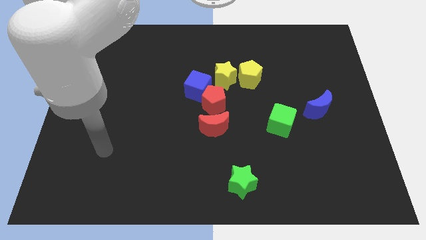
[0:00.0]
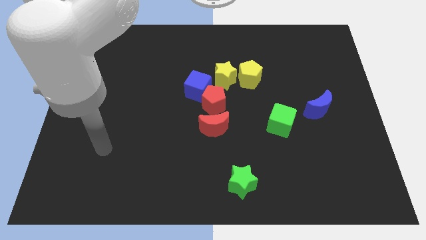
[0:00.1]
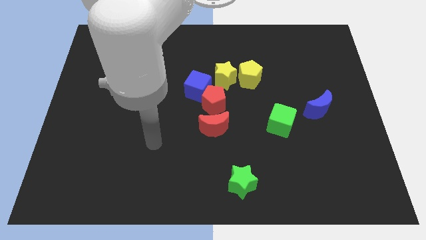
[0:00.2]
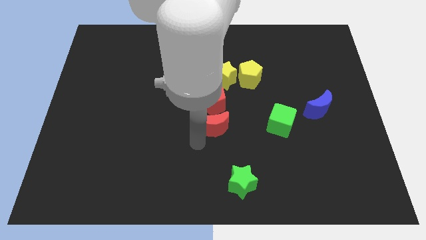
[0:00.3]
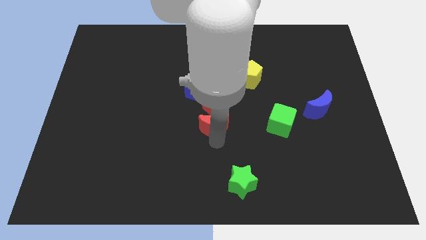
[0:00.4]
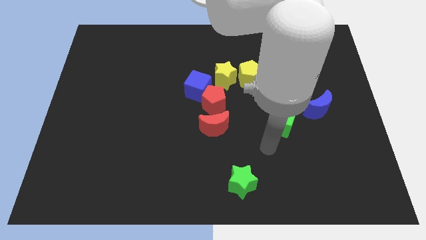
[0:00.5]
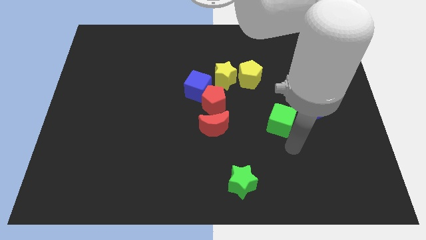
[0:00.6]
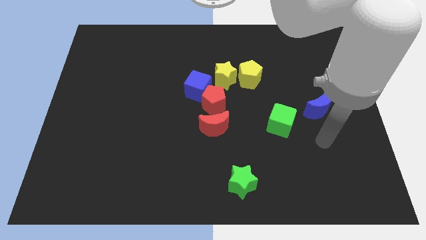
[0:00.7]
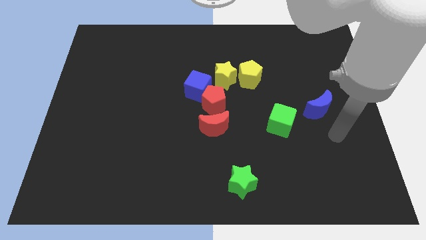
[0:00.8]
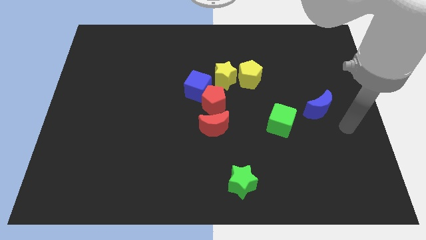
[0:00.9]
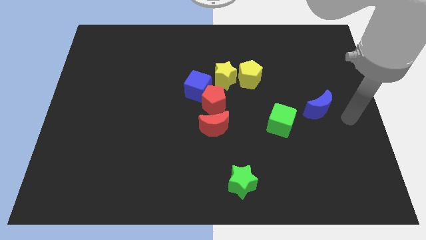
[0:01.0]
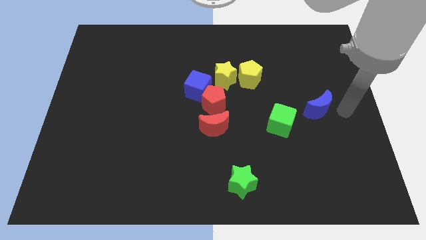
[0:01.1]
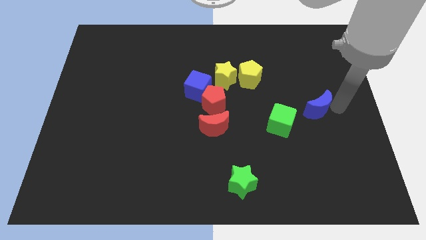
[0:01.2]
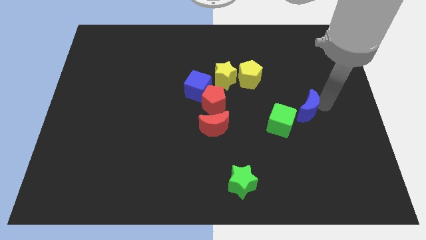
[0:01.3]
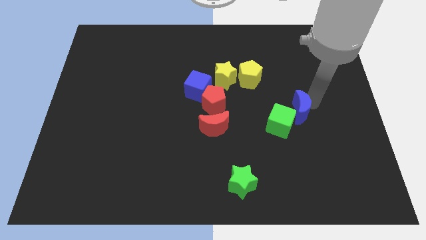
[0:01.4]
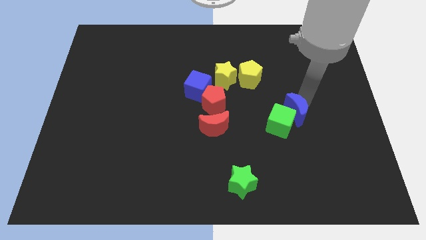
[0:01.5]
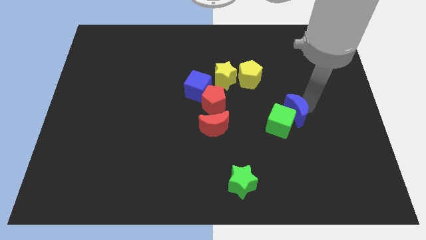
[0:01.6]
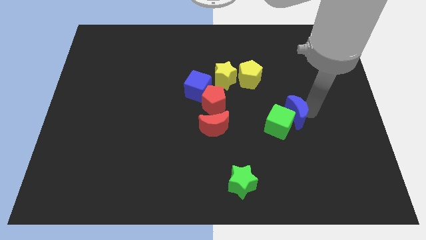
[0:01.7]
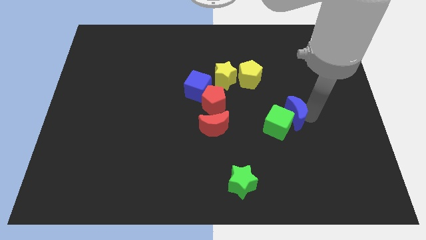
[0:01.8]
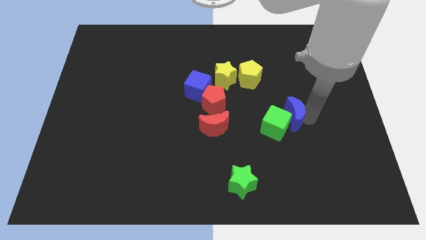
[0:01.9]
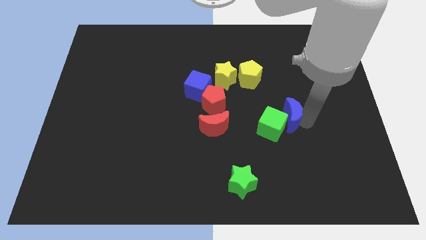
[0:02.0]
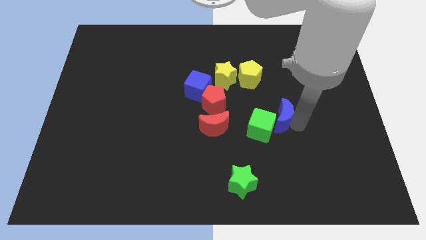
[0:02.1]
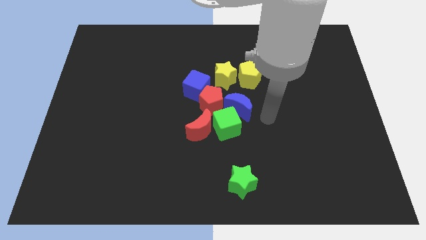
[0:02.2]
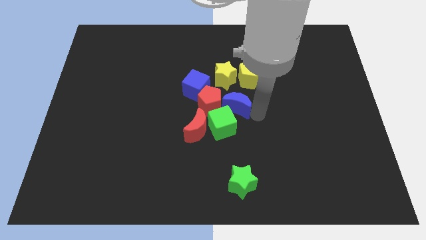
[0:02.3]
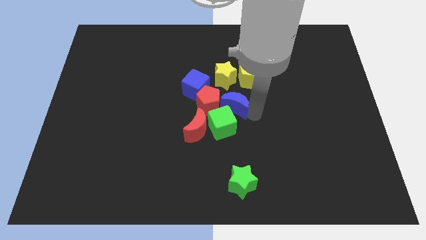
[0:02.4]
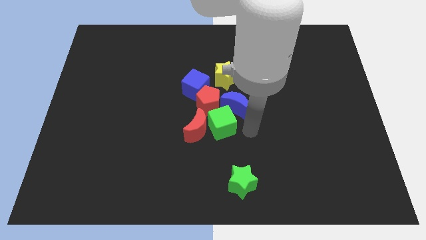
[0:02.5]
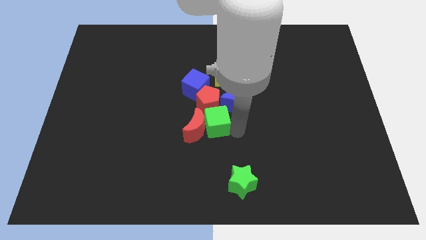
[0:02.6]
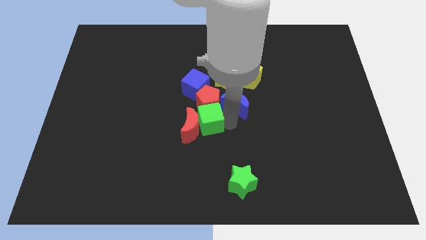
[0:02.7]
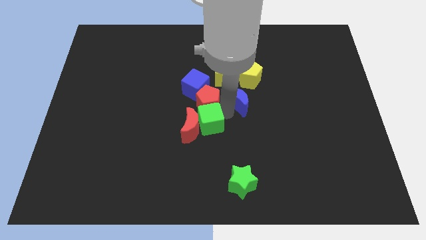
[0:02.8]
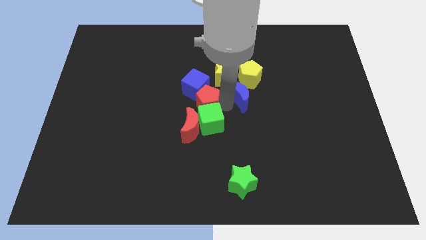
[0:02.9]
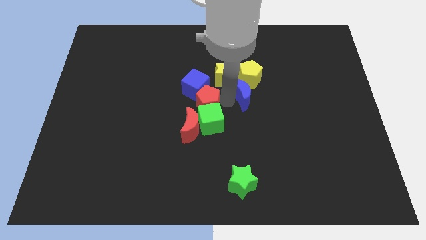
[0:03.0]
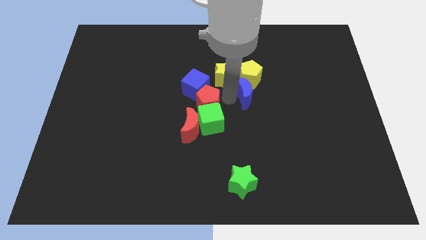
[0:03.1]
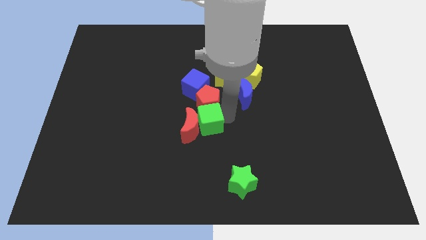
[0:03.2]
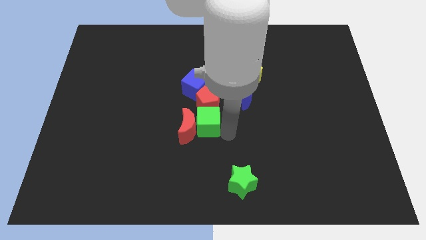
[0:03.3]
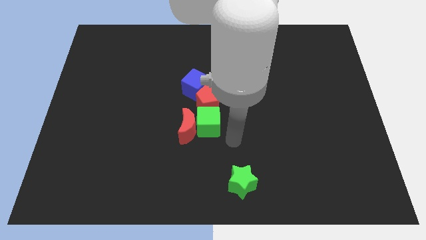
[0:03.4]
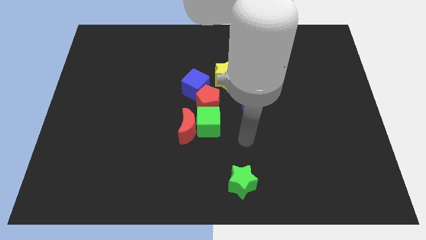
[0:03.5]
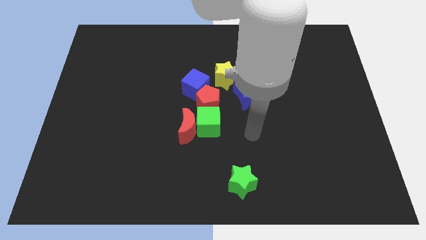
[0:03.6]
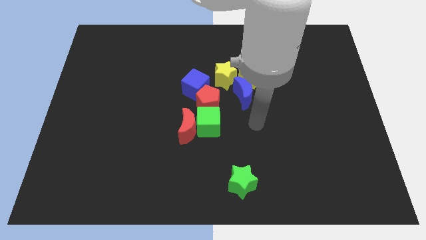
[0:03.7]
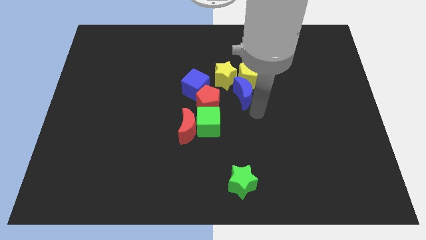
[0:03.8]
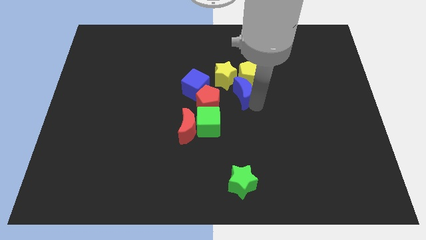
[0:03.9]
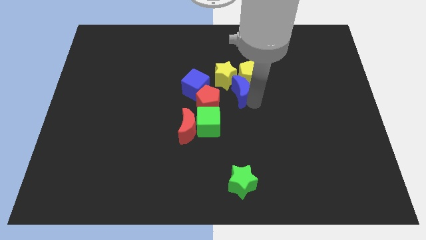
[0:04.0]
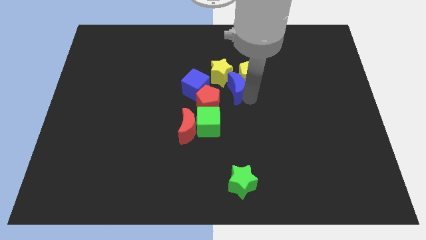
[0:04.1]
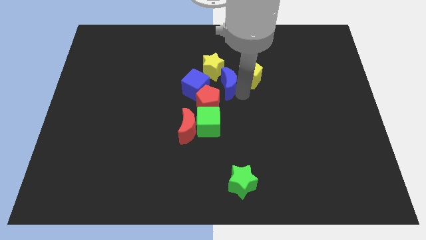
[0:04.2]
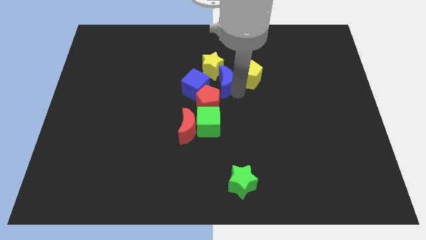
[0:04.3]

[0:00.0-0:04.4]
move the blue moon close to the yellow star

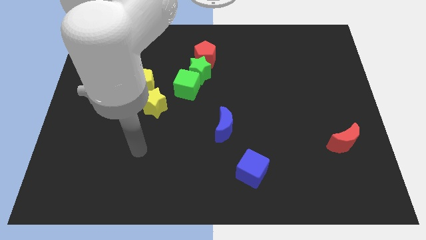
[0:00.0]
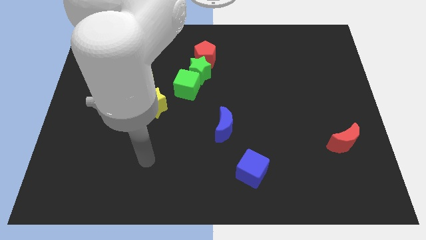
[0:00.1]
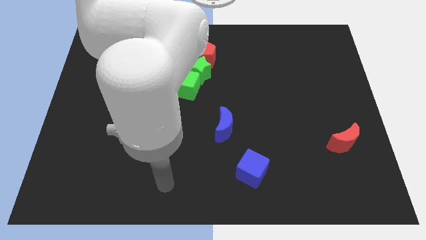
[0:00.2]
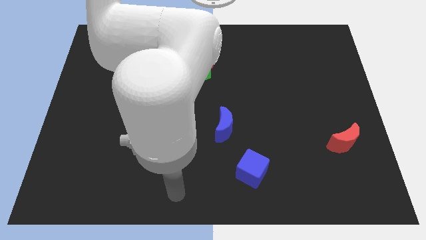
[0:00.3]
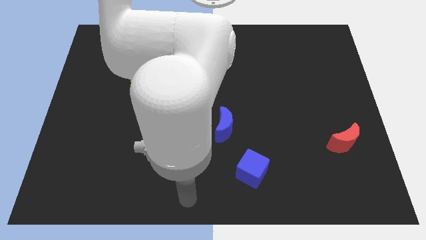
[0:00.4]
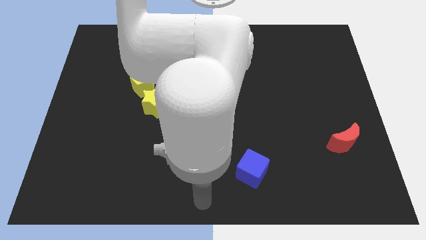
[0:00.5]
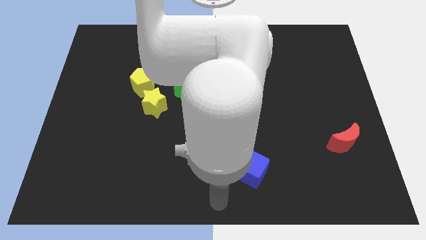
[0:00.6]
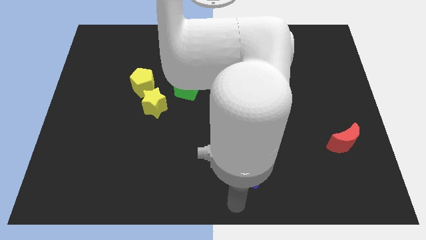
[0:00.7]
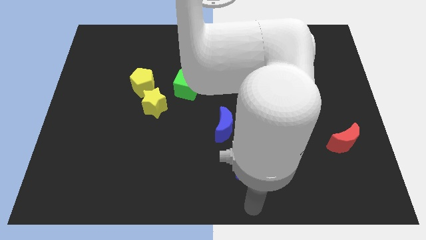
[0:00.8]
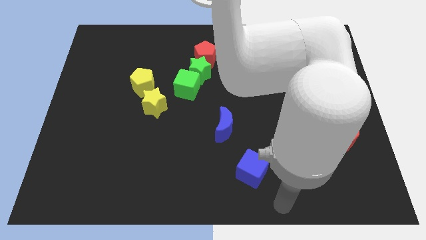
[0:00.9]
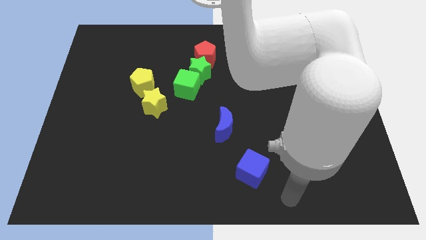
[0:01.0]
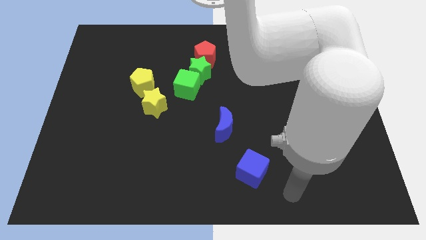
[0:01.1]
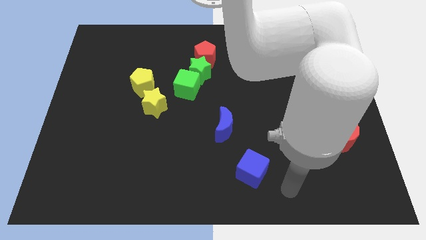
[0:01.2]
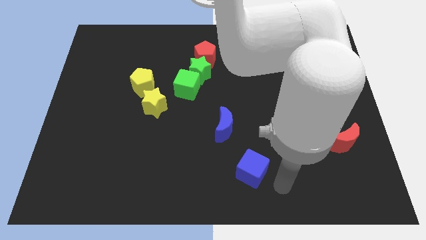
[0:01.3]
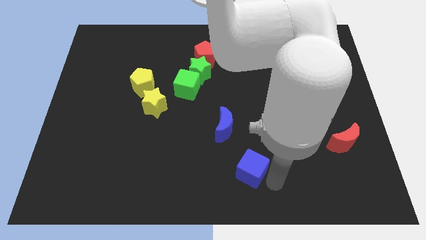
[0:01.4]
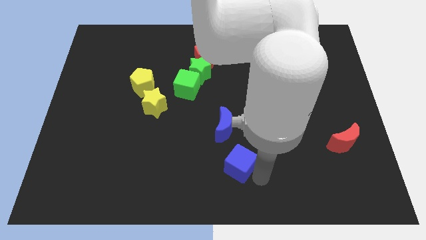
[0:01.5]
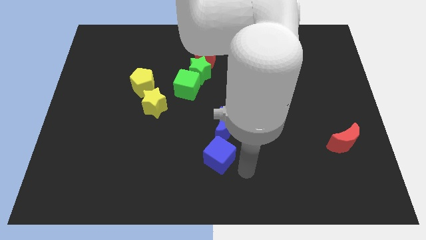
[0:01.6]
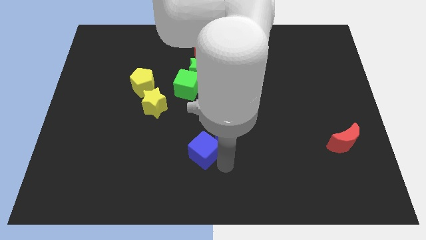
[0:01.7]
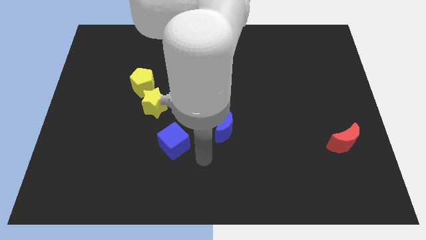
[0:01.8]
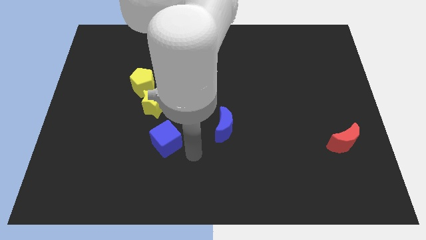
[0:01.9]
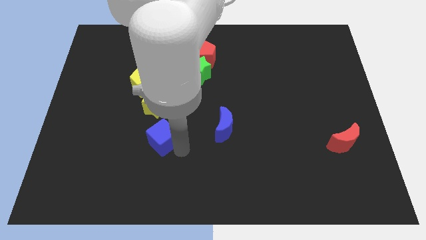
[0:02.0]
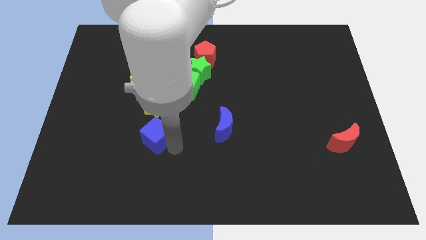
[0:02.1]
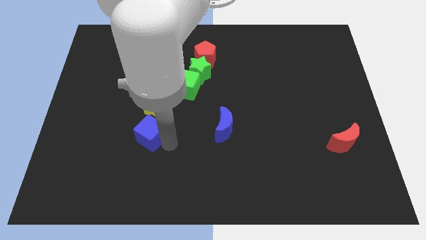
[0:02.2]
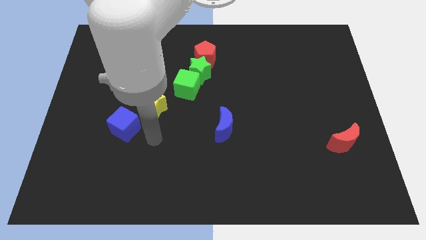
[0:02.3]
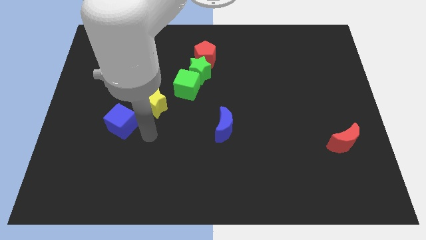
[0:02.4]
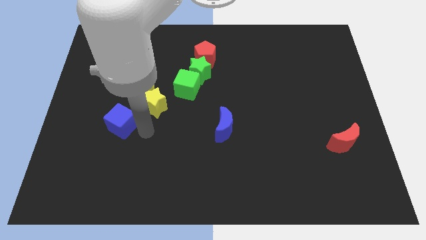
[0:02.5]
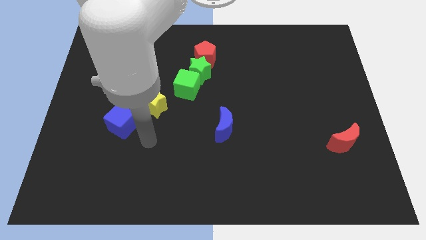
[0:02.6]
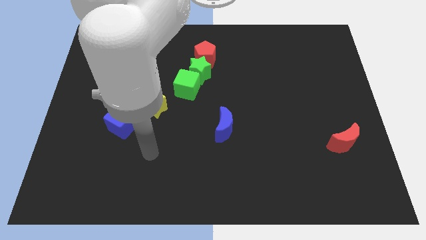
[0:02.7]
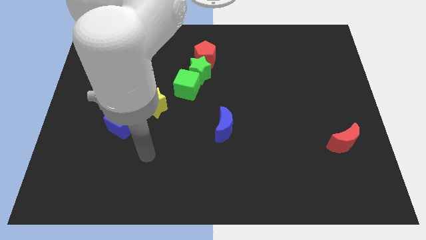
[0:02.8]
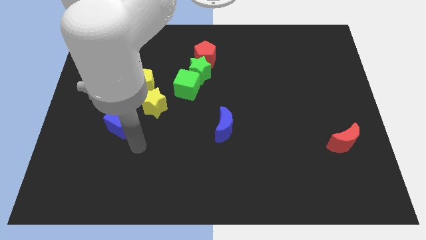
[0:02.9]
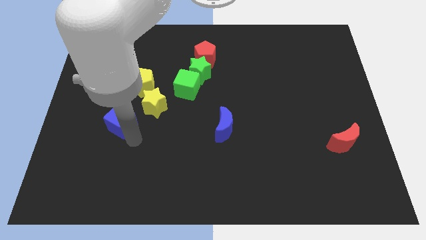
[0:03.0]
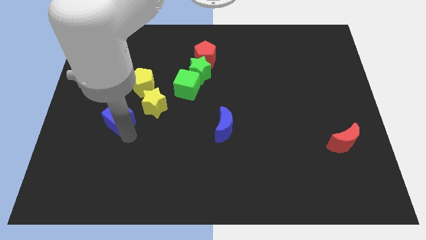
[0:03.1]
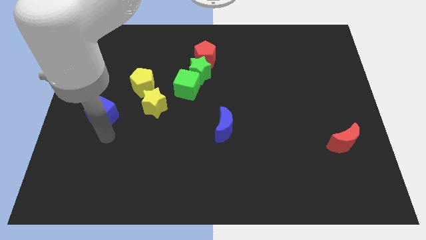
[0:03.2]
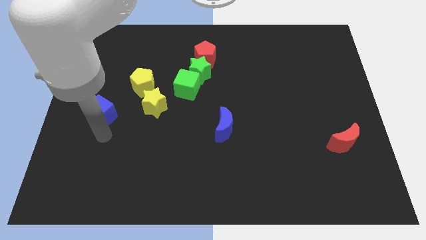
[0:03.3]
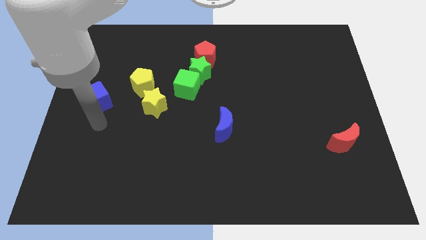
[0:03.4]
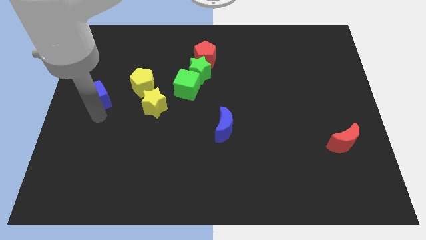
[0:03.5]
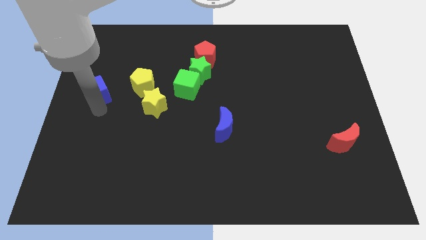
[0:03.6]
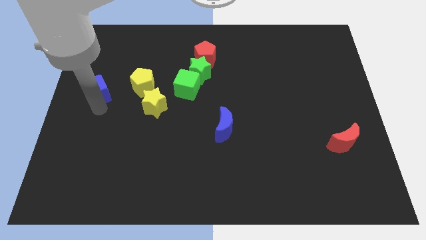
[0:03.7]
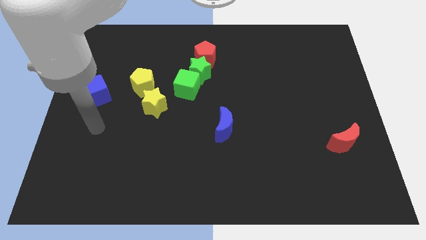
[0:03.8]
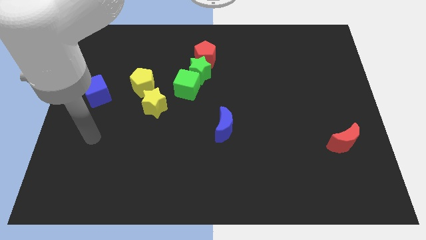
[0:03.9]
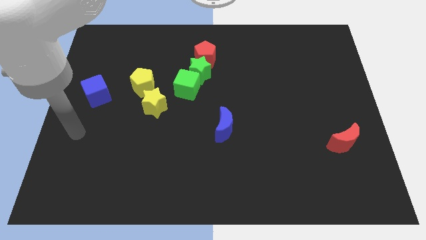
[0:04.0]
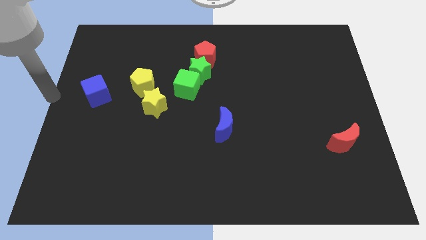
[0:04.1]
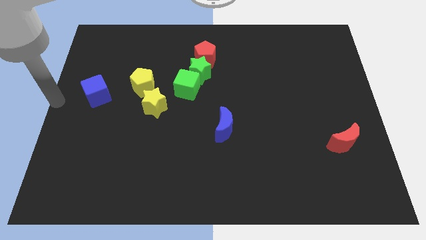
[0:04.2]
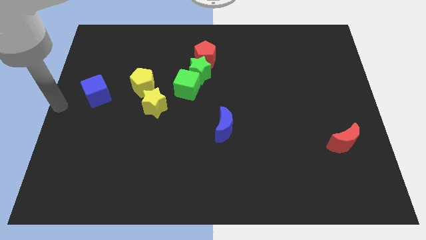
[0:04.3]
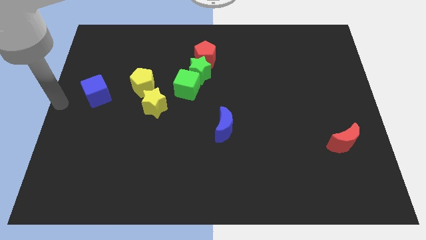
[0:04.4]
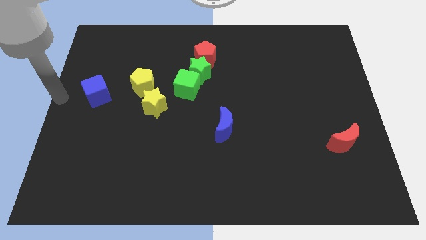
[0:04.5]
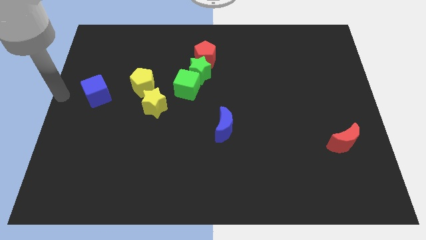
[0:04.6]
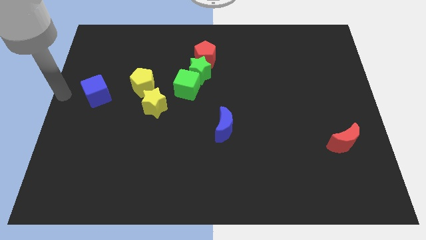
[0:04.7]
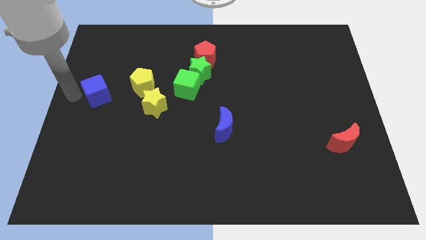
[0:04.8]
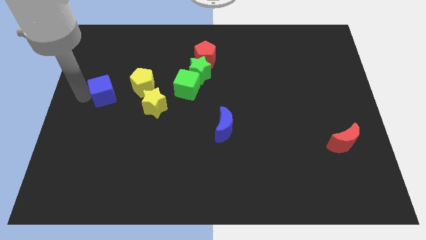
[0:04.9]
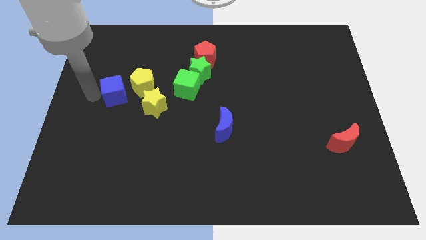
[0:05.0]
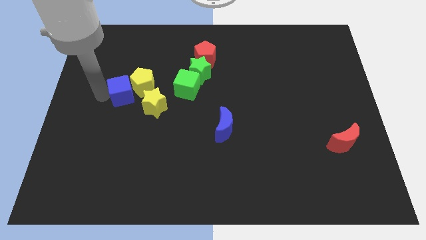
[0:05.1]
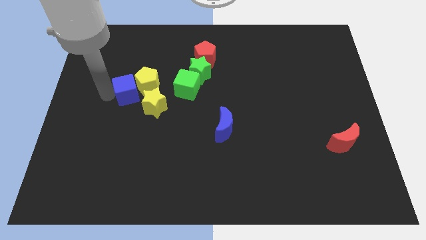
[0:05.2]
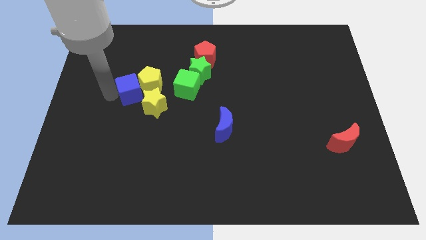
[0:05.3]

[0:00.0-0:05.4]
move the blue cube towards the yellow pentagon
